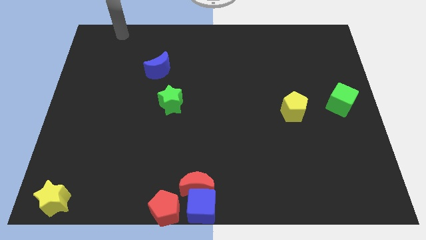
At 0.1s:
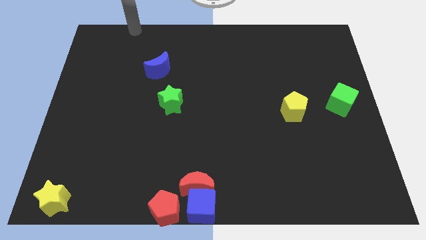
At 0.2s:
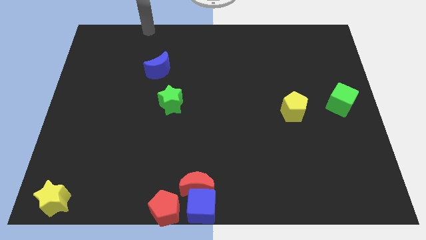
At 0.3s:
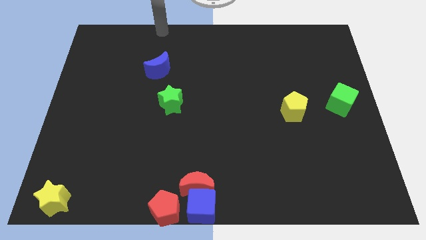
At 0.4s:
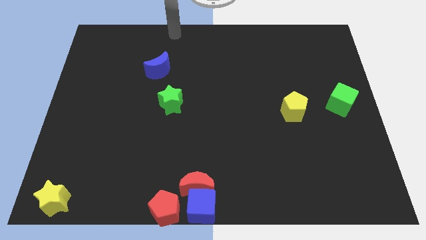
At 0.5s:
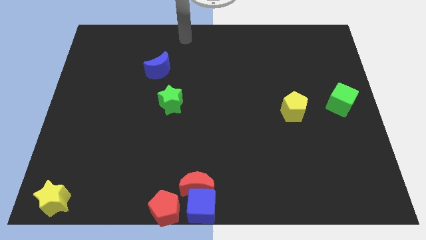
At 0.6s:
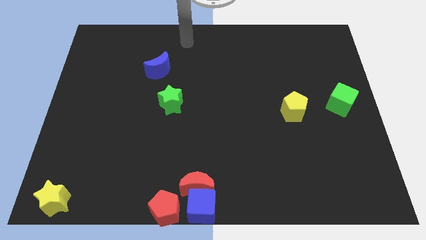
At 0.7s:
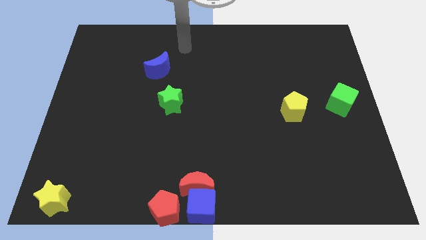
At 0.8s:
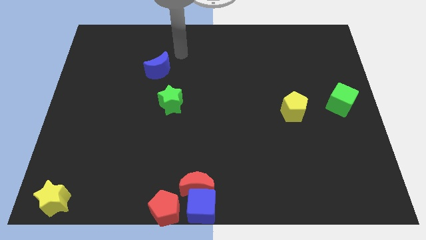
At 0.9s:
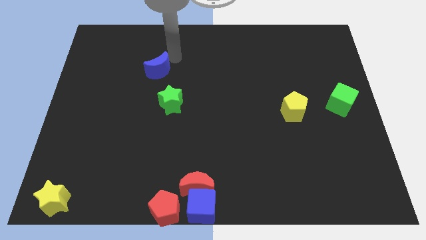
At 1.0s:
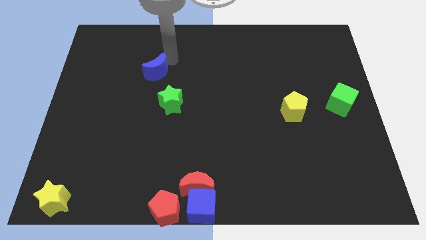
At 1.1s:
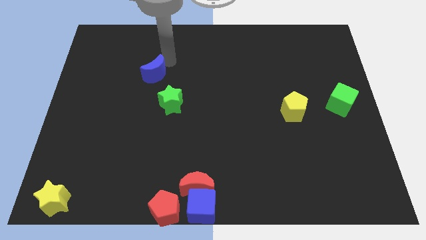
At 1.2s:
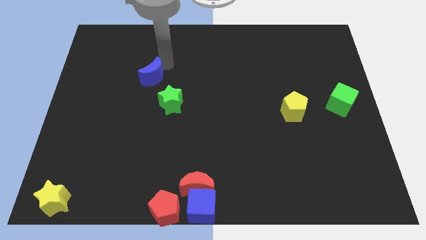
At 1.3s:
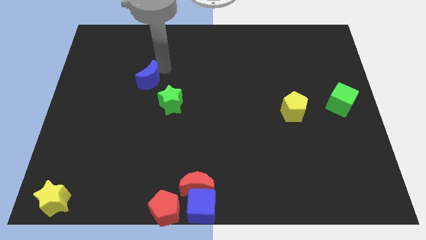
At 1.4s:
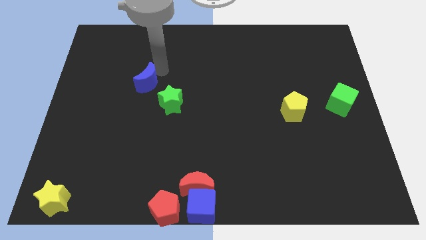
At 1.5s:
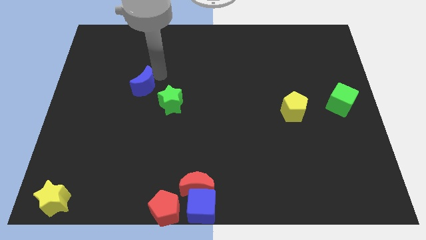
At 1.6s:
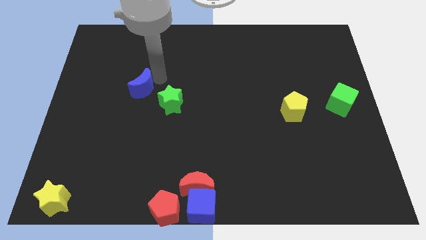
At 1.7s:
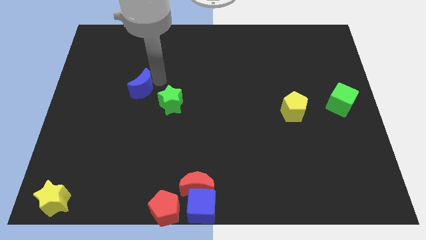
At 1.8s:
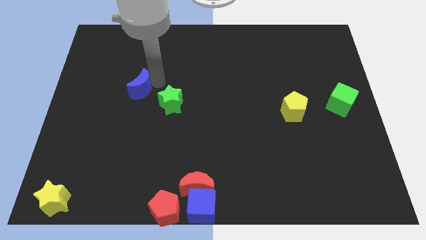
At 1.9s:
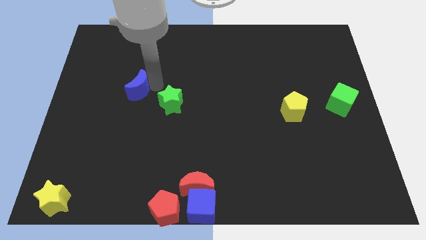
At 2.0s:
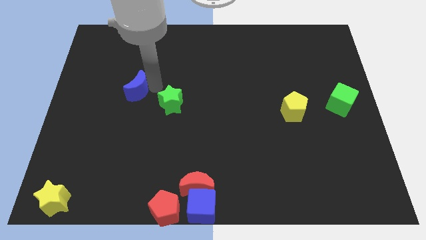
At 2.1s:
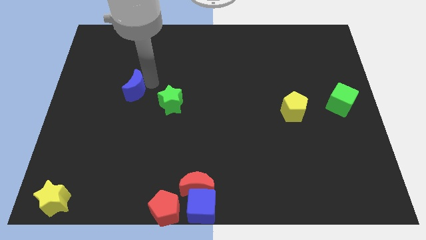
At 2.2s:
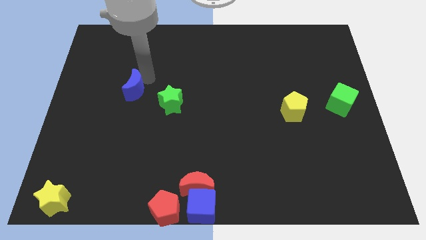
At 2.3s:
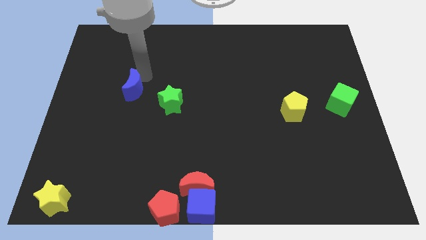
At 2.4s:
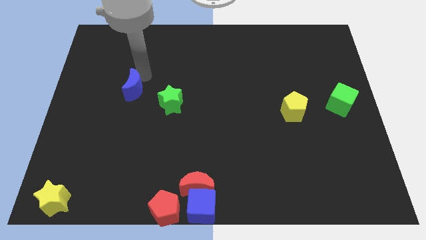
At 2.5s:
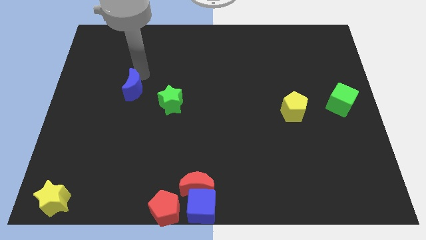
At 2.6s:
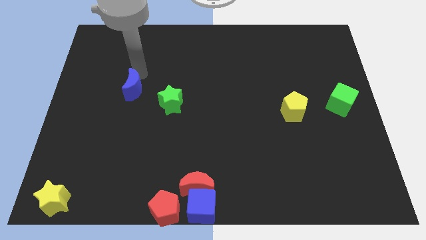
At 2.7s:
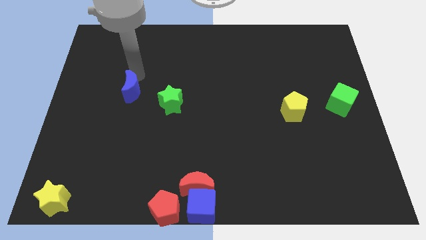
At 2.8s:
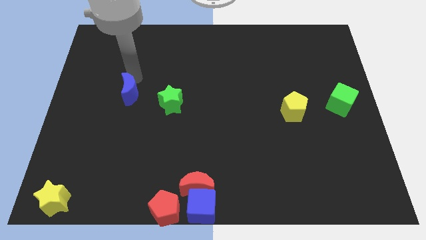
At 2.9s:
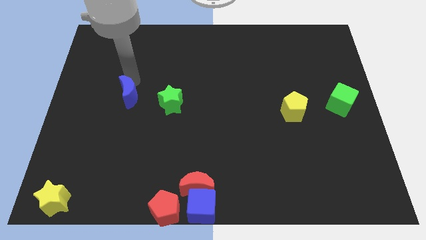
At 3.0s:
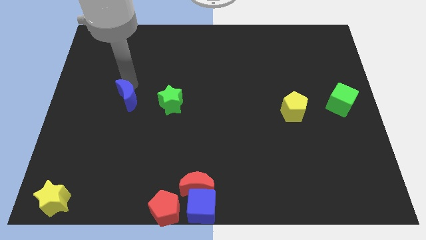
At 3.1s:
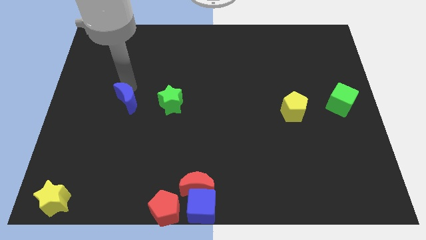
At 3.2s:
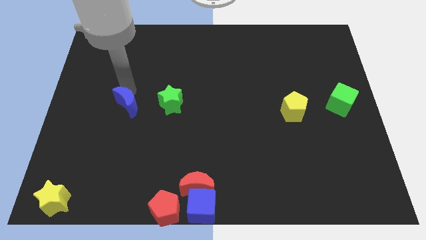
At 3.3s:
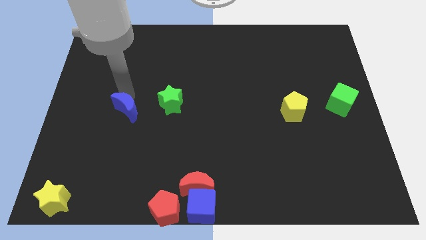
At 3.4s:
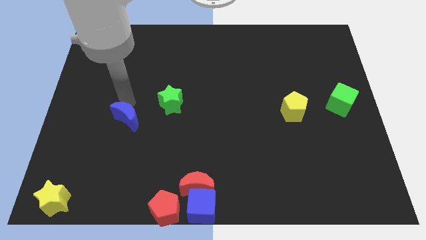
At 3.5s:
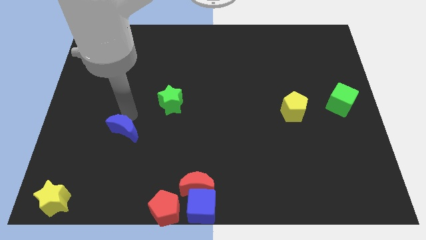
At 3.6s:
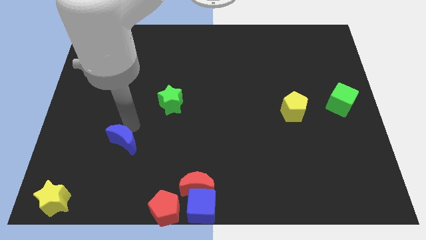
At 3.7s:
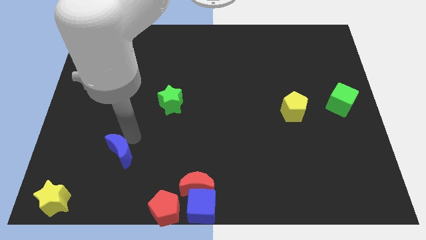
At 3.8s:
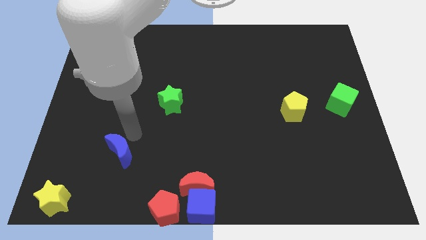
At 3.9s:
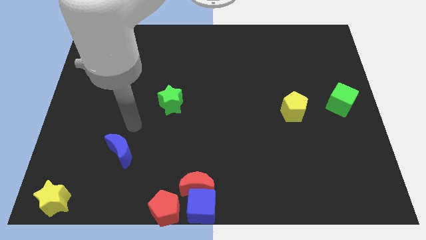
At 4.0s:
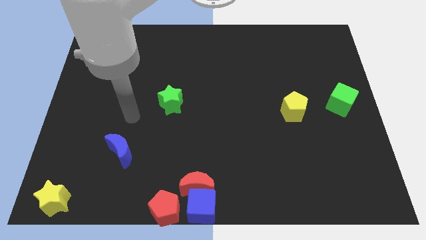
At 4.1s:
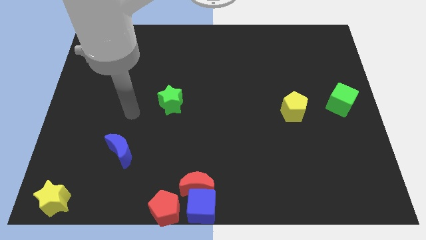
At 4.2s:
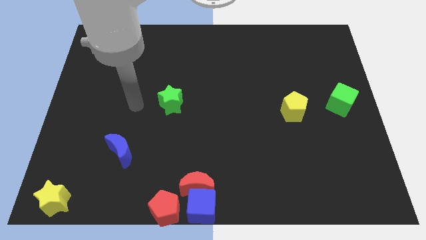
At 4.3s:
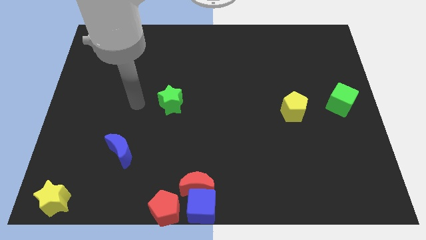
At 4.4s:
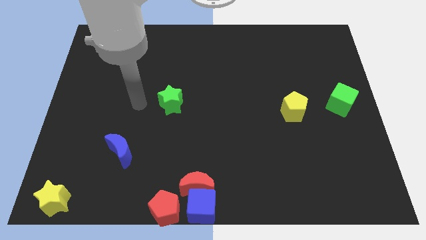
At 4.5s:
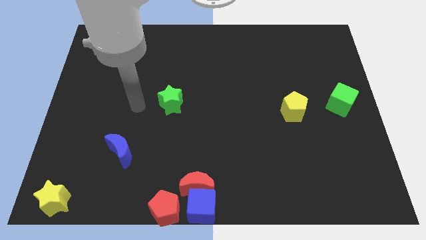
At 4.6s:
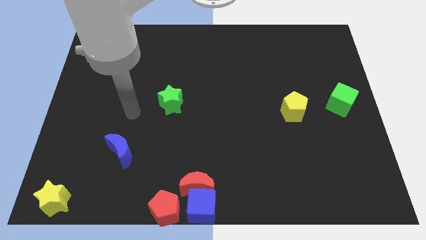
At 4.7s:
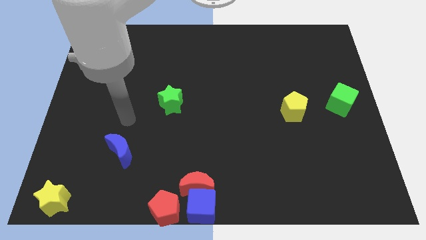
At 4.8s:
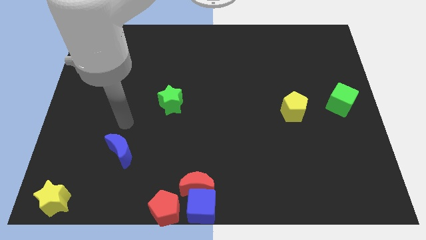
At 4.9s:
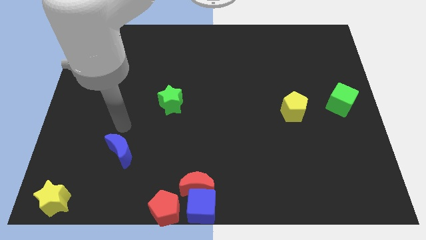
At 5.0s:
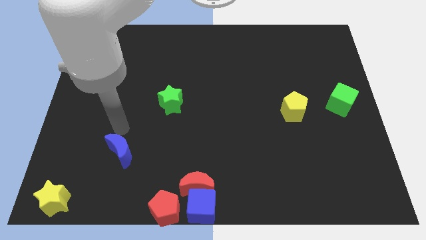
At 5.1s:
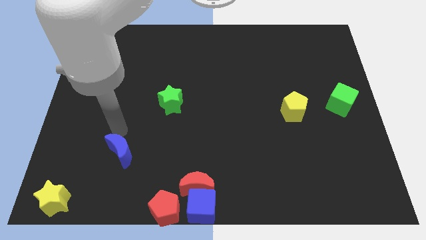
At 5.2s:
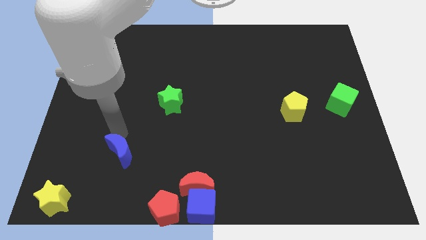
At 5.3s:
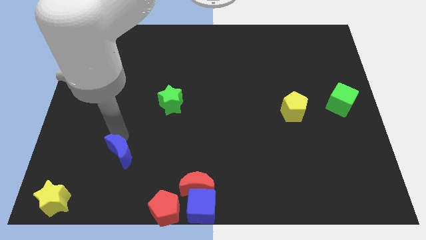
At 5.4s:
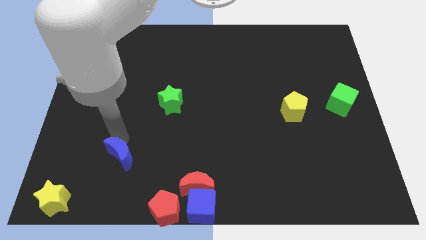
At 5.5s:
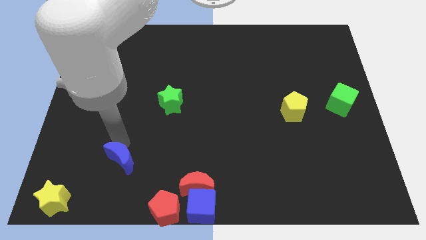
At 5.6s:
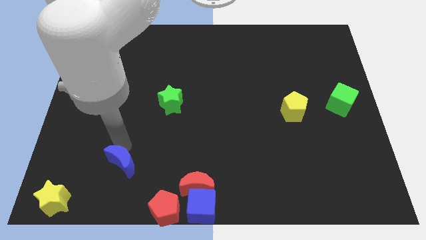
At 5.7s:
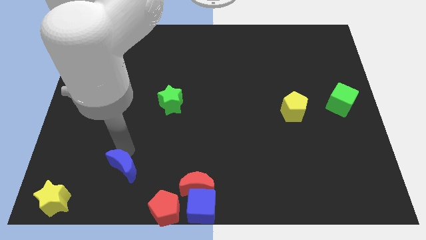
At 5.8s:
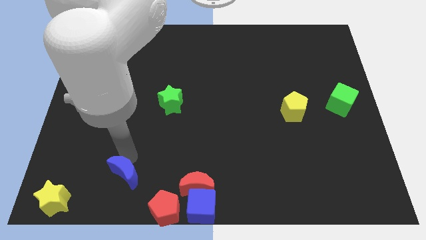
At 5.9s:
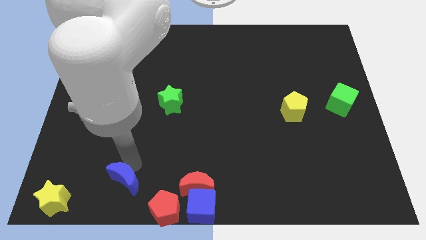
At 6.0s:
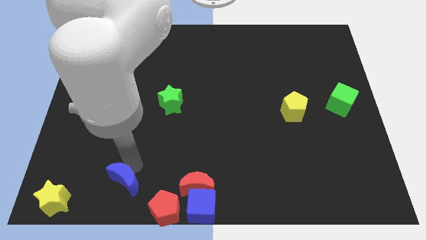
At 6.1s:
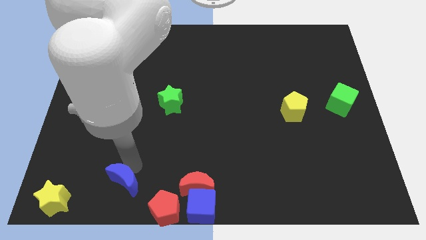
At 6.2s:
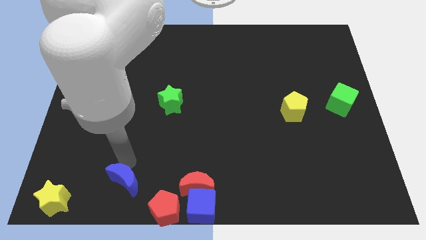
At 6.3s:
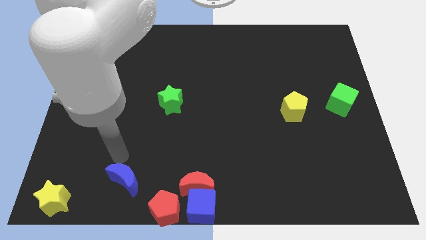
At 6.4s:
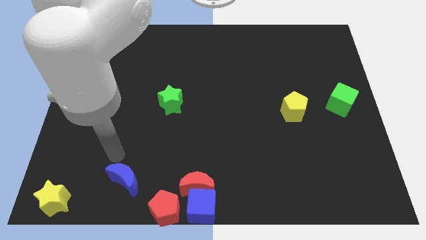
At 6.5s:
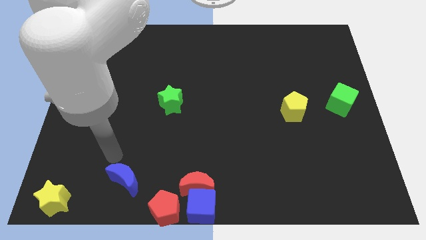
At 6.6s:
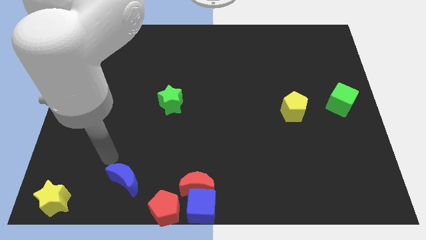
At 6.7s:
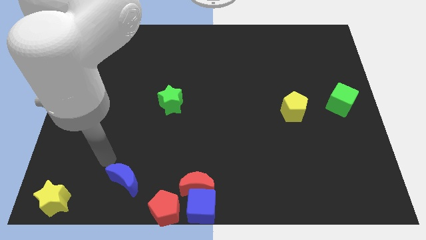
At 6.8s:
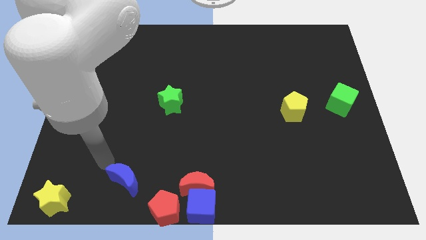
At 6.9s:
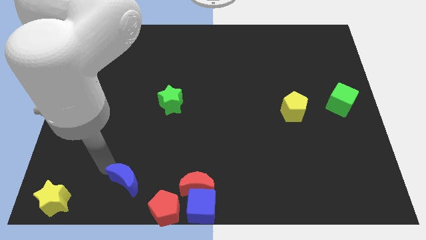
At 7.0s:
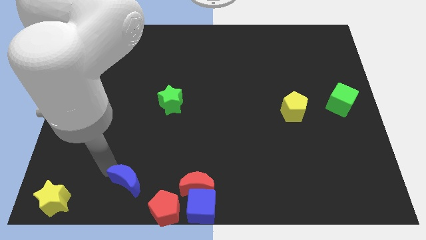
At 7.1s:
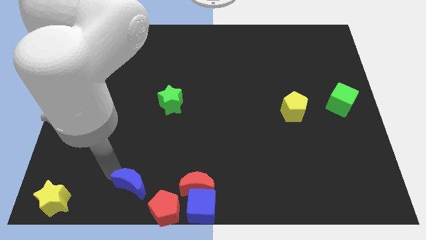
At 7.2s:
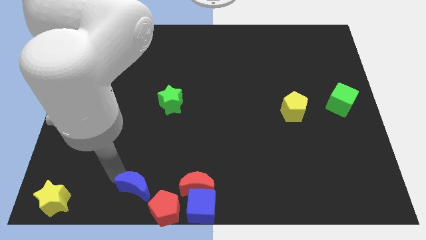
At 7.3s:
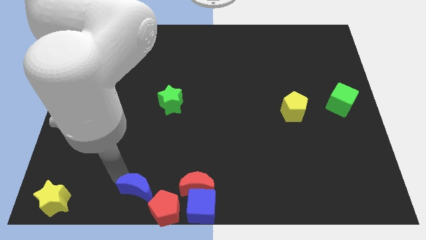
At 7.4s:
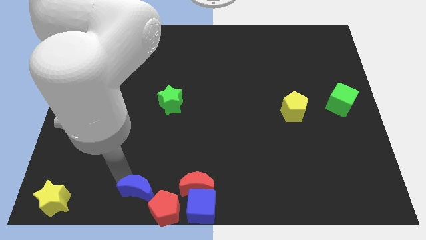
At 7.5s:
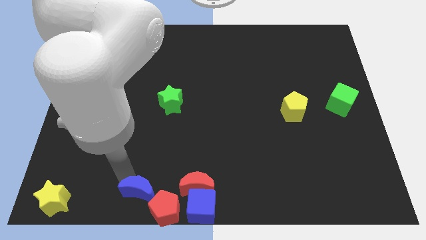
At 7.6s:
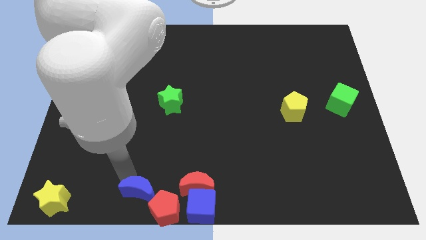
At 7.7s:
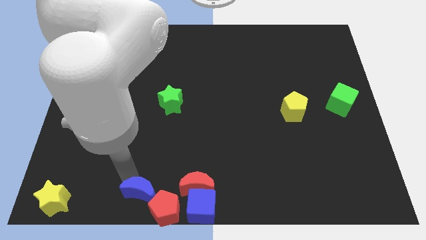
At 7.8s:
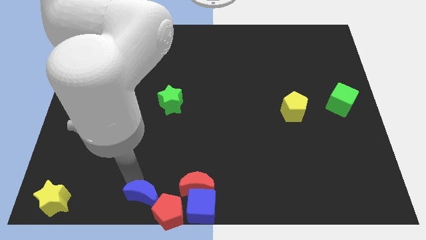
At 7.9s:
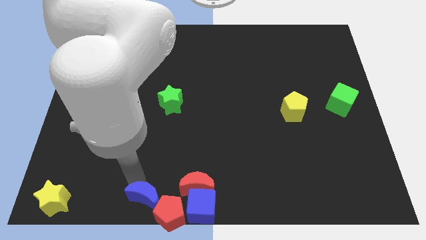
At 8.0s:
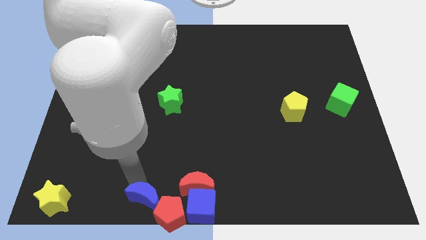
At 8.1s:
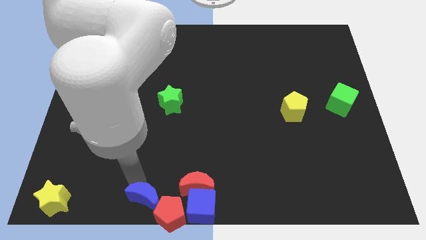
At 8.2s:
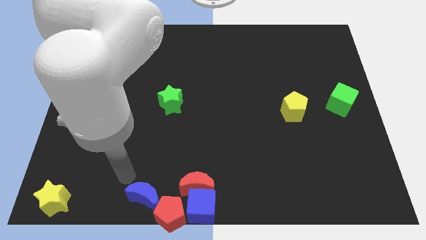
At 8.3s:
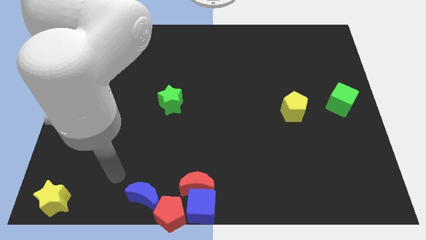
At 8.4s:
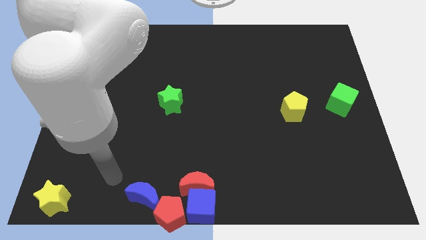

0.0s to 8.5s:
push the blue moon into the red pentagon

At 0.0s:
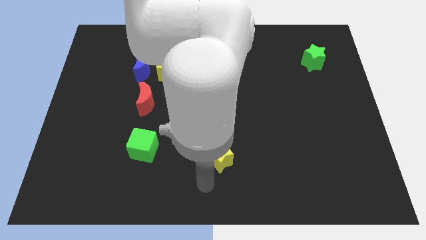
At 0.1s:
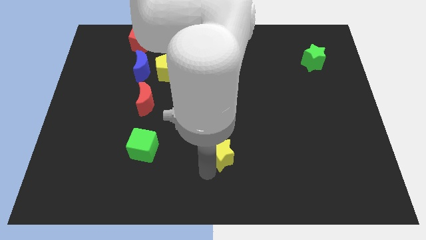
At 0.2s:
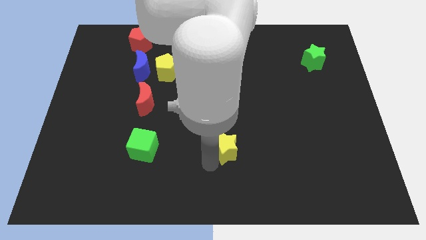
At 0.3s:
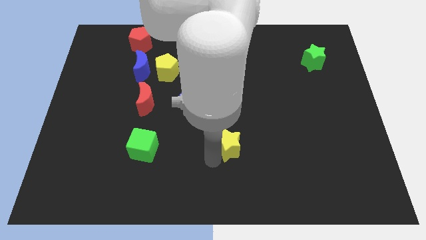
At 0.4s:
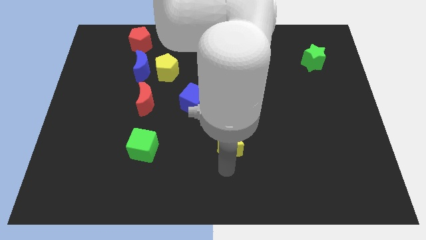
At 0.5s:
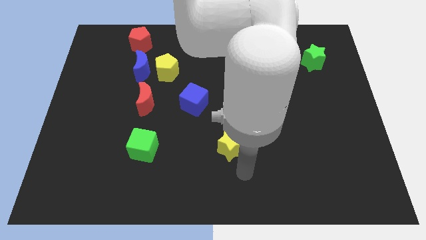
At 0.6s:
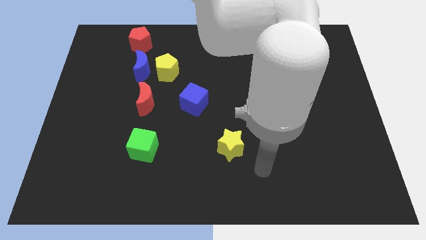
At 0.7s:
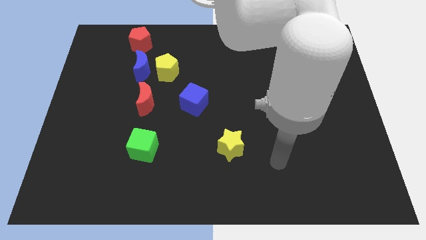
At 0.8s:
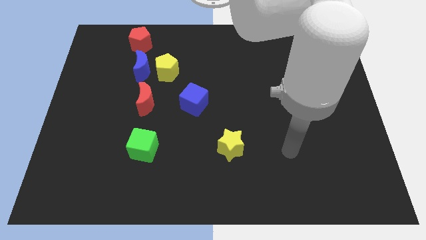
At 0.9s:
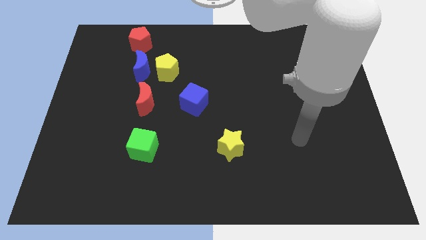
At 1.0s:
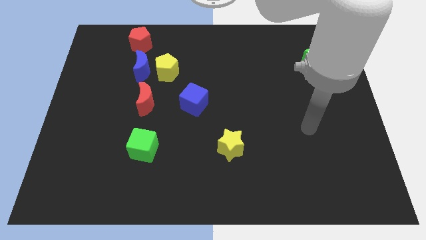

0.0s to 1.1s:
slide the yellow star upward
